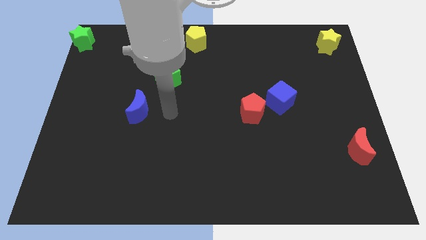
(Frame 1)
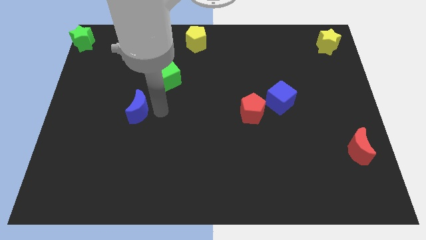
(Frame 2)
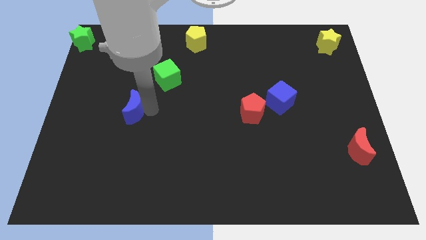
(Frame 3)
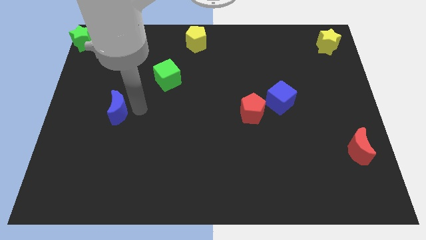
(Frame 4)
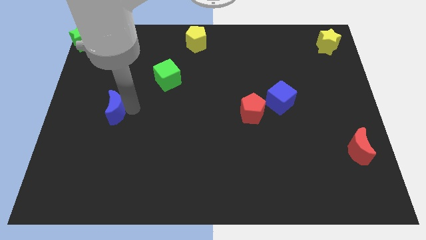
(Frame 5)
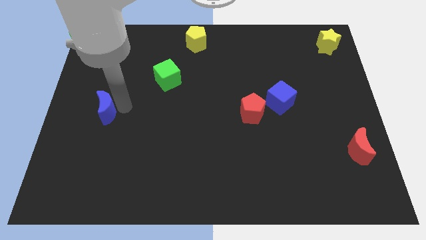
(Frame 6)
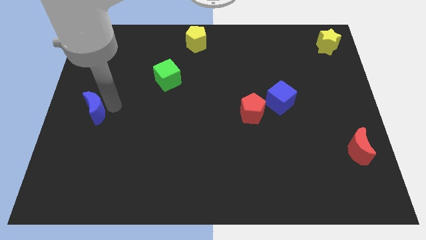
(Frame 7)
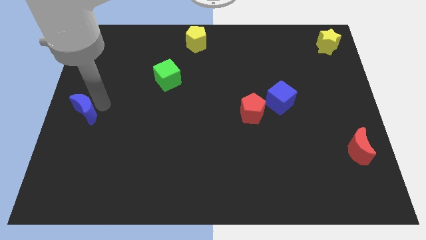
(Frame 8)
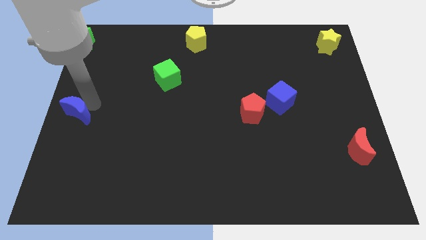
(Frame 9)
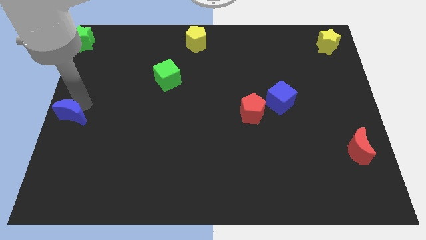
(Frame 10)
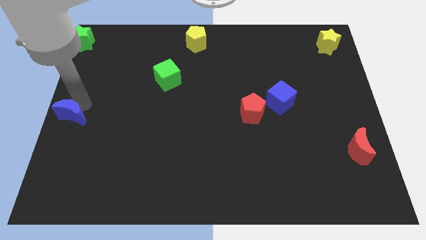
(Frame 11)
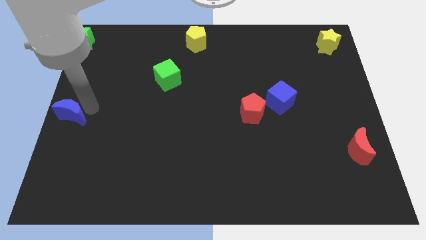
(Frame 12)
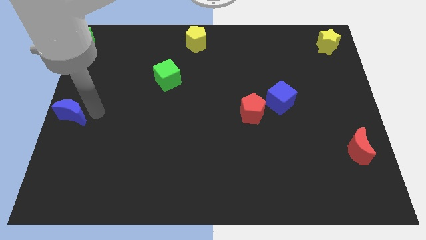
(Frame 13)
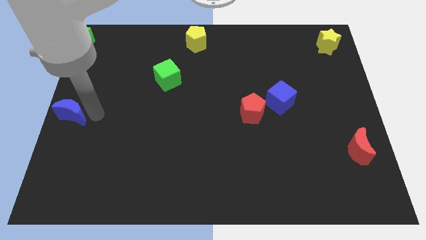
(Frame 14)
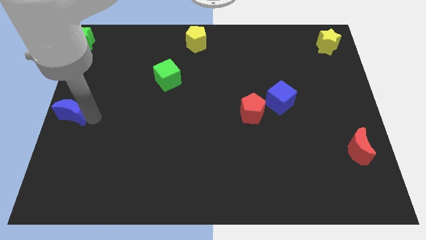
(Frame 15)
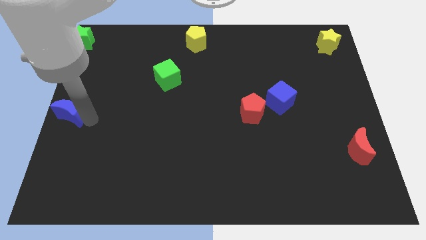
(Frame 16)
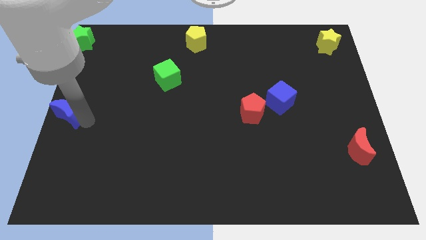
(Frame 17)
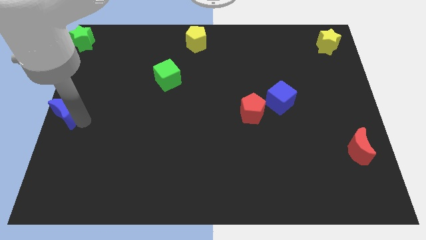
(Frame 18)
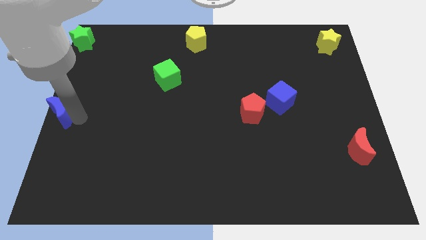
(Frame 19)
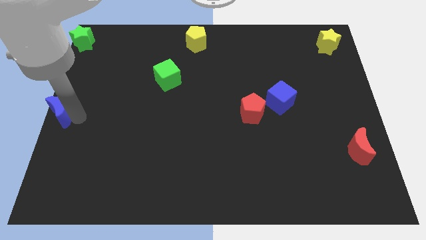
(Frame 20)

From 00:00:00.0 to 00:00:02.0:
push the blue moon towards the center left of the board

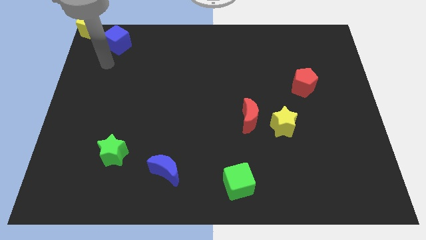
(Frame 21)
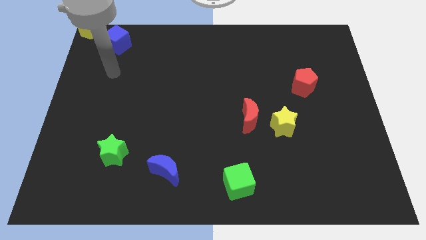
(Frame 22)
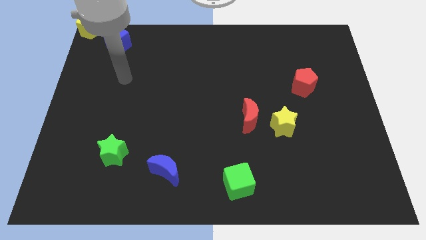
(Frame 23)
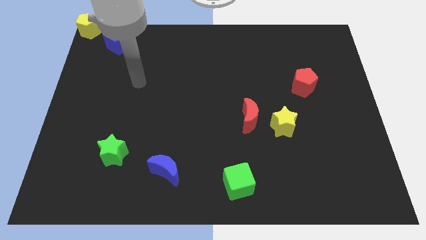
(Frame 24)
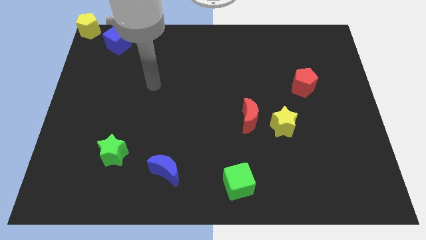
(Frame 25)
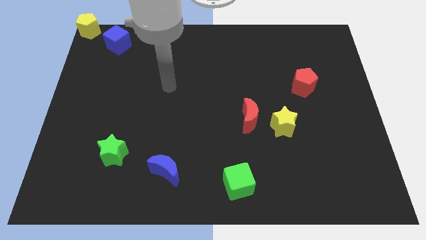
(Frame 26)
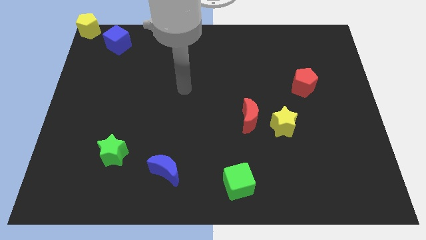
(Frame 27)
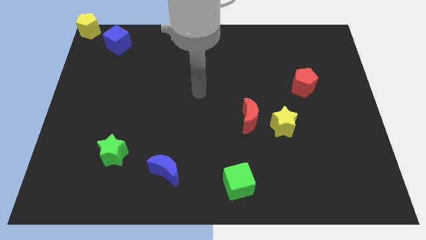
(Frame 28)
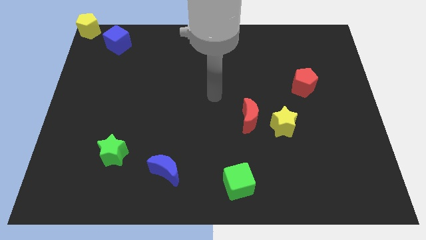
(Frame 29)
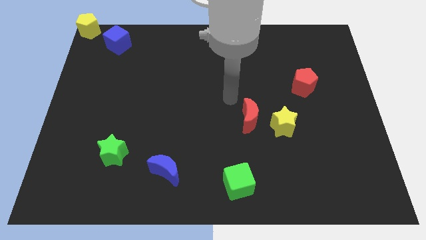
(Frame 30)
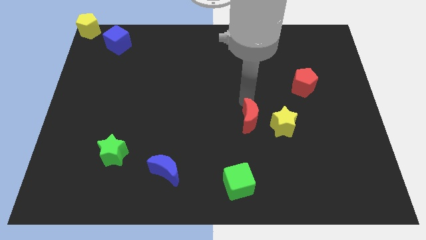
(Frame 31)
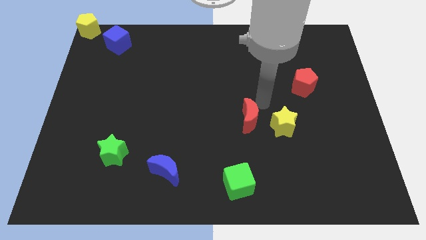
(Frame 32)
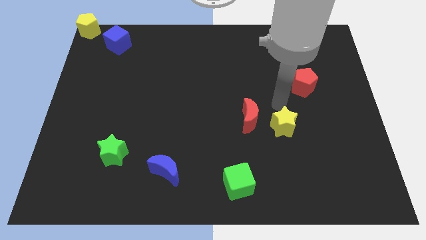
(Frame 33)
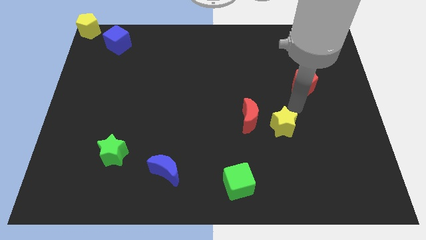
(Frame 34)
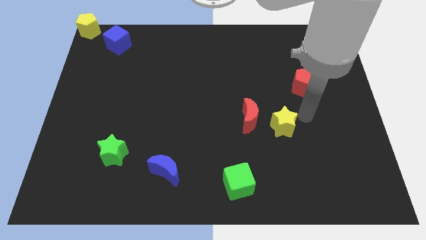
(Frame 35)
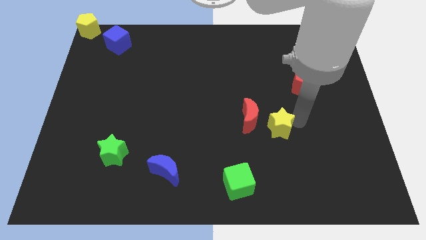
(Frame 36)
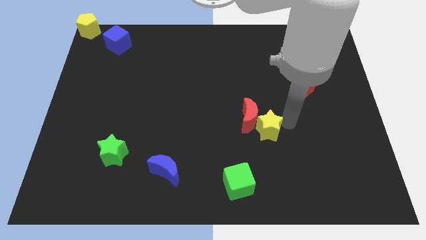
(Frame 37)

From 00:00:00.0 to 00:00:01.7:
move your arm towards the yellow star

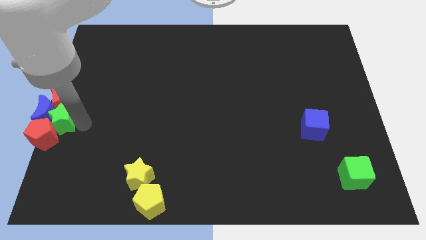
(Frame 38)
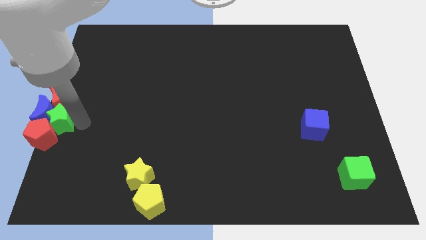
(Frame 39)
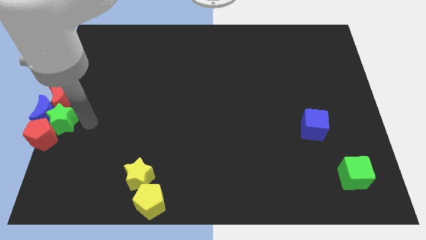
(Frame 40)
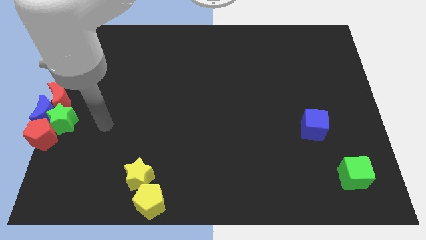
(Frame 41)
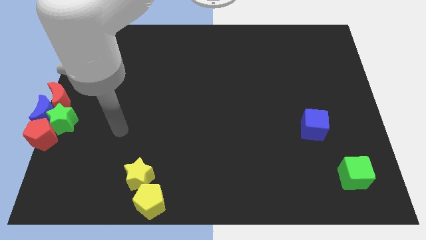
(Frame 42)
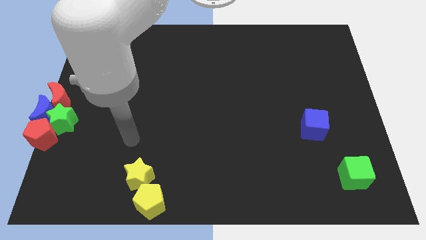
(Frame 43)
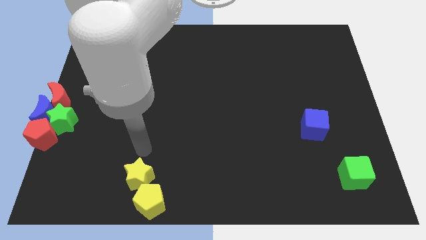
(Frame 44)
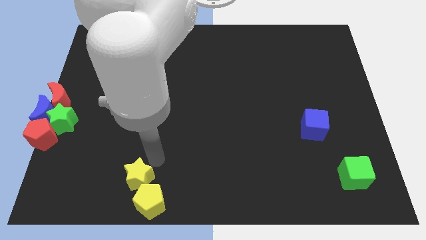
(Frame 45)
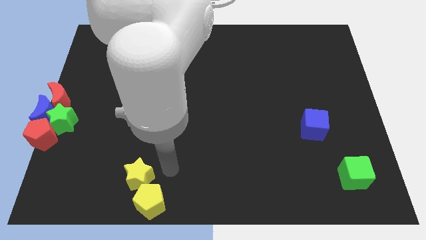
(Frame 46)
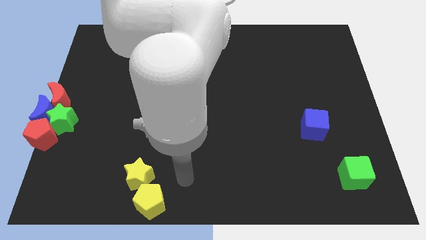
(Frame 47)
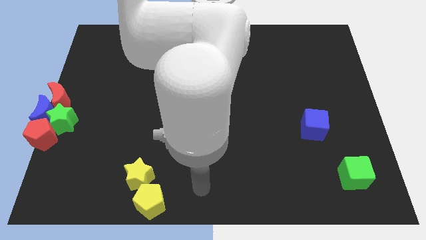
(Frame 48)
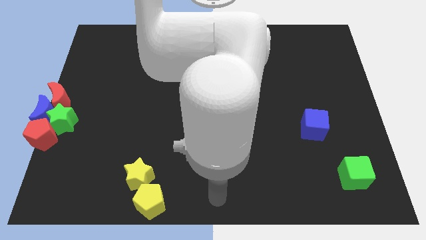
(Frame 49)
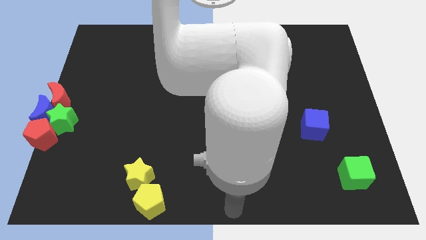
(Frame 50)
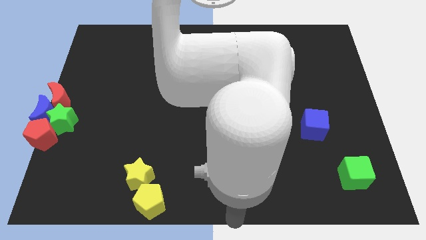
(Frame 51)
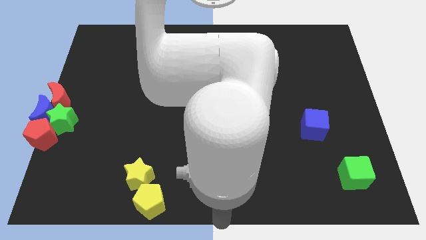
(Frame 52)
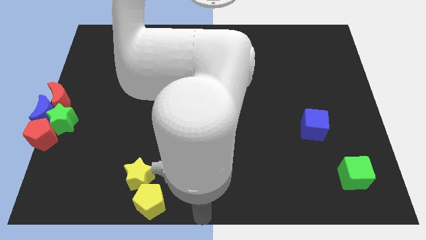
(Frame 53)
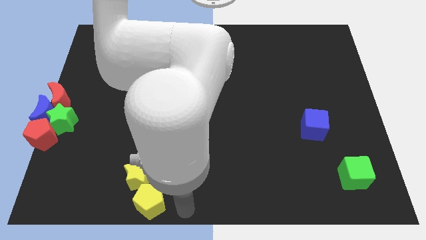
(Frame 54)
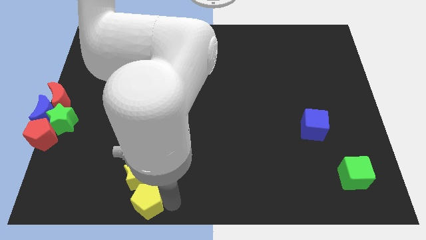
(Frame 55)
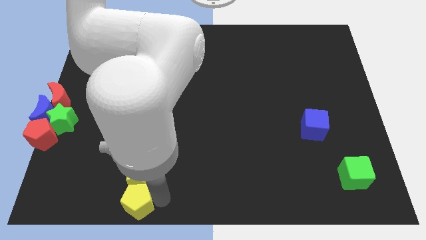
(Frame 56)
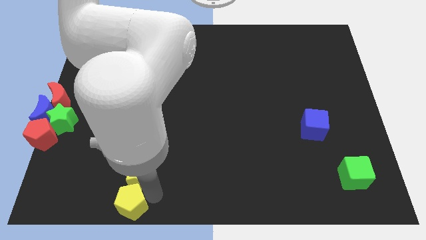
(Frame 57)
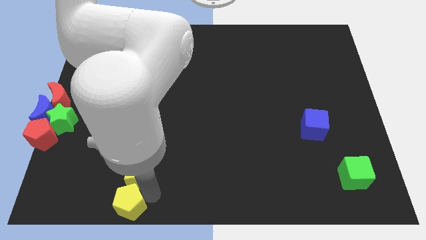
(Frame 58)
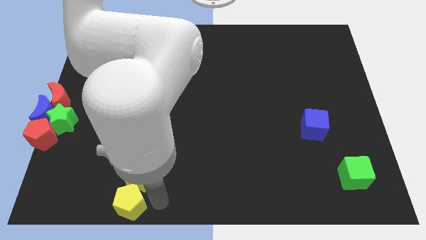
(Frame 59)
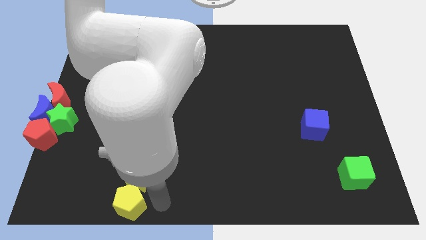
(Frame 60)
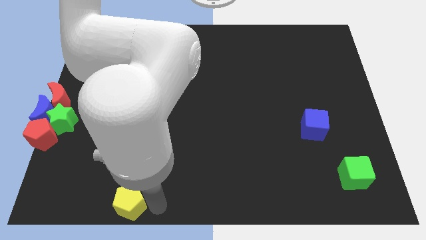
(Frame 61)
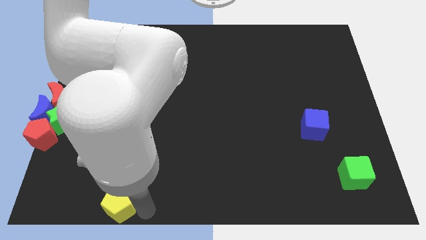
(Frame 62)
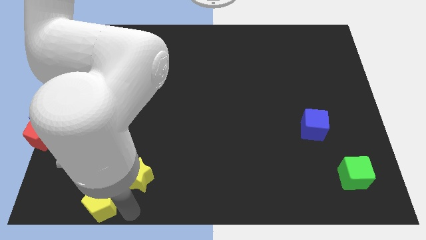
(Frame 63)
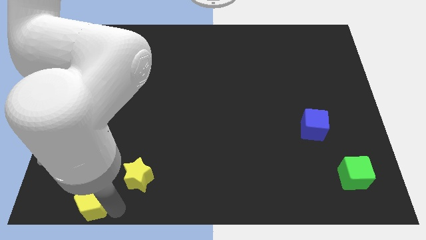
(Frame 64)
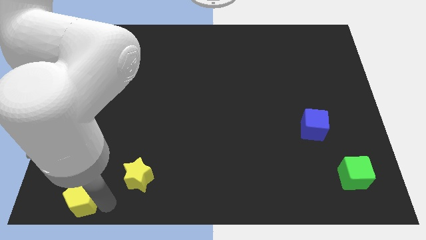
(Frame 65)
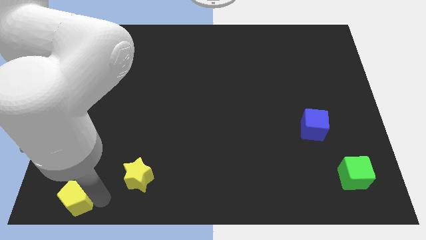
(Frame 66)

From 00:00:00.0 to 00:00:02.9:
move yellow pentagon to the bottom left of yellow star

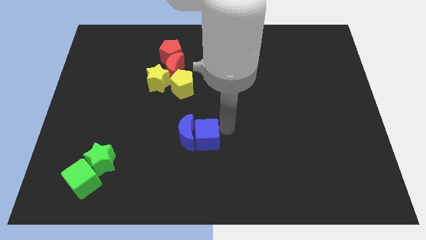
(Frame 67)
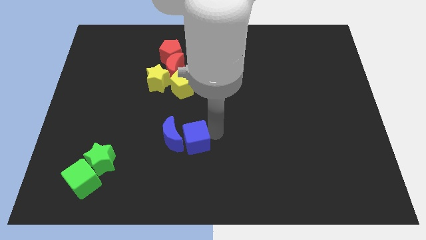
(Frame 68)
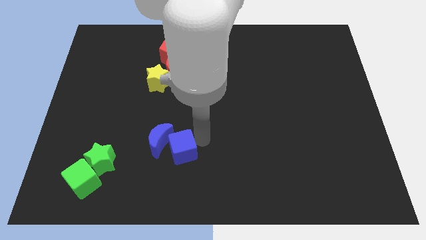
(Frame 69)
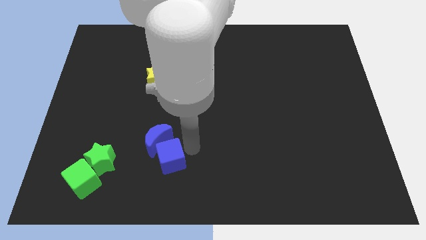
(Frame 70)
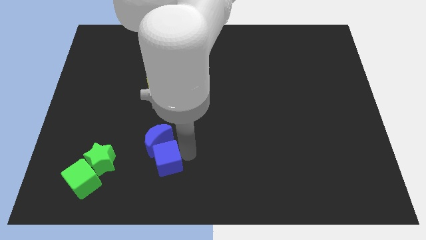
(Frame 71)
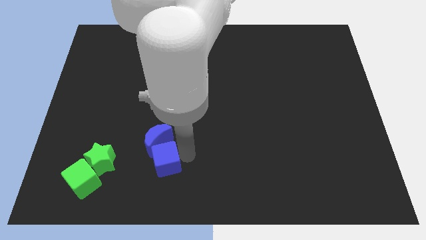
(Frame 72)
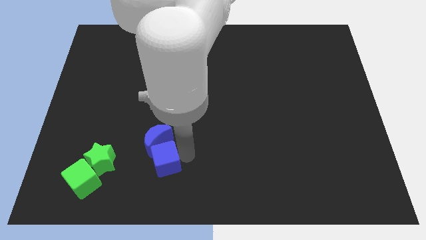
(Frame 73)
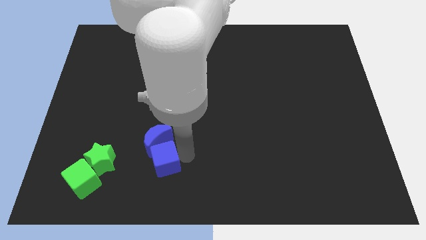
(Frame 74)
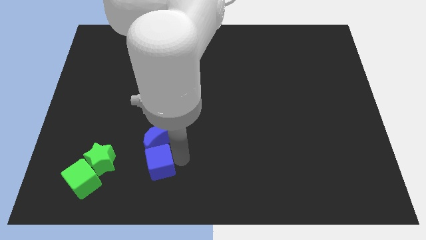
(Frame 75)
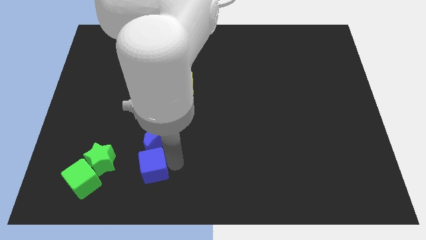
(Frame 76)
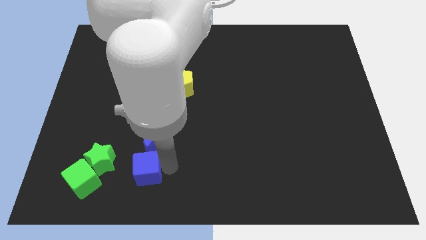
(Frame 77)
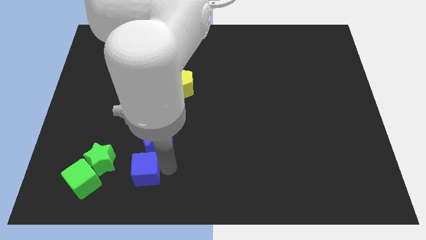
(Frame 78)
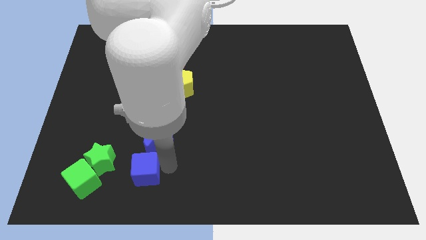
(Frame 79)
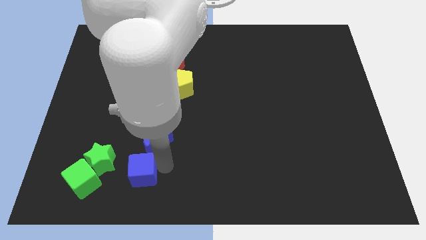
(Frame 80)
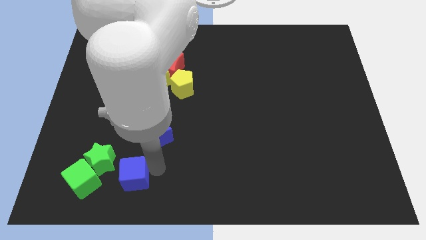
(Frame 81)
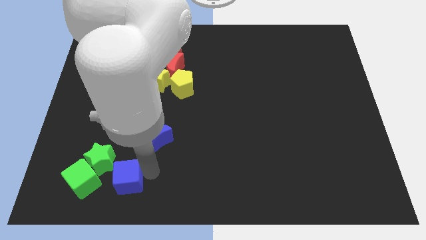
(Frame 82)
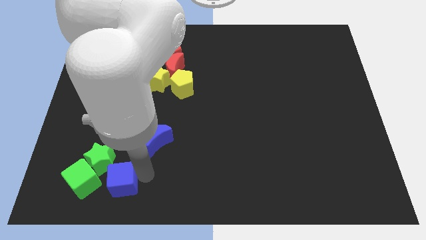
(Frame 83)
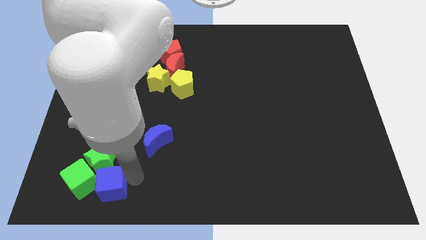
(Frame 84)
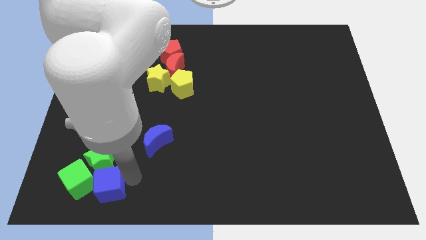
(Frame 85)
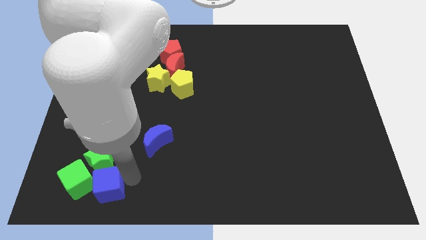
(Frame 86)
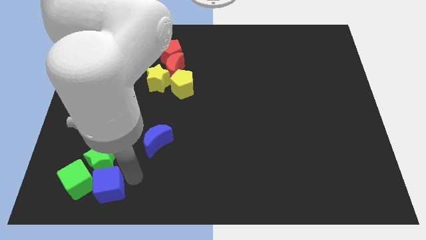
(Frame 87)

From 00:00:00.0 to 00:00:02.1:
place blue cube below the green cube
